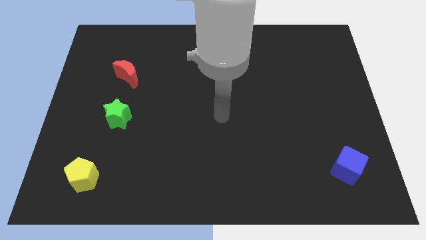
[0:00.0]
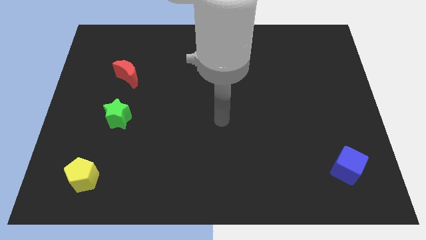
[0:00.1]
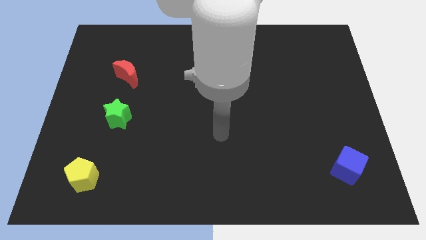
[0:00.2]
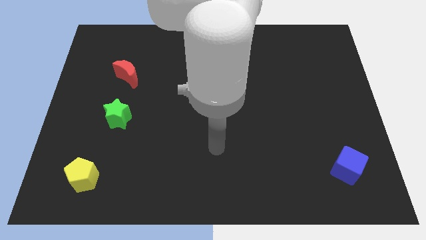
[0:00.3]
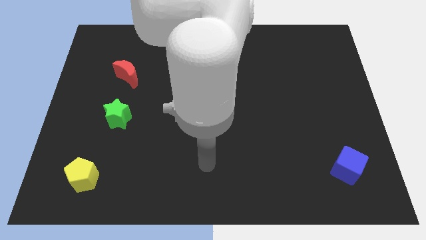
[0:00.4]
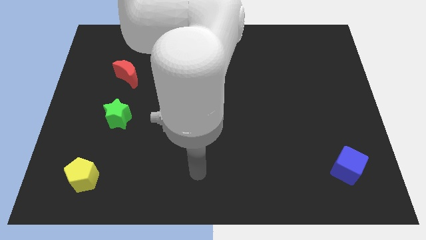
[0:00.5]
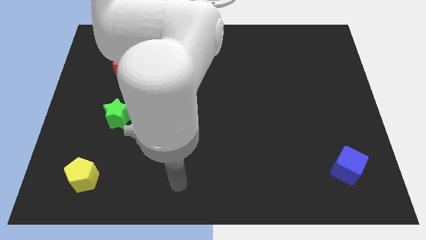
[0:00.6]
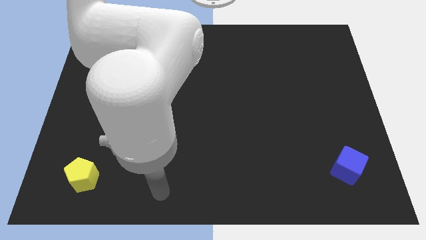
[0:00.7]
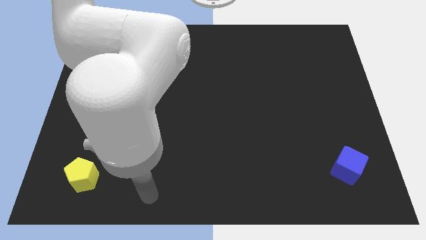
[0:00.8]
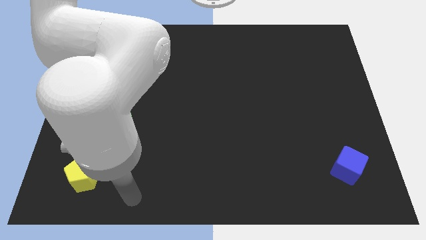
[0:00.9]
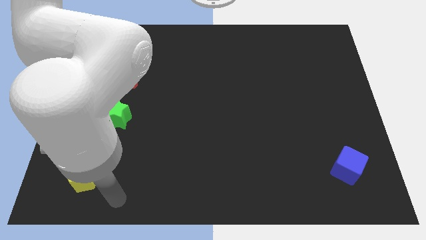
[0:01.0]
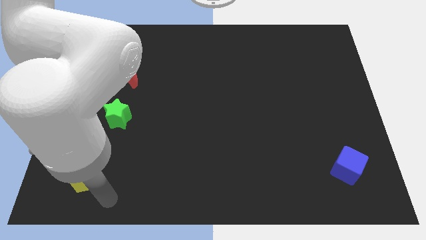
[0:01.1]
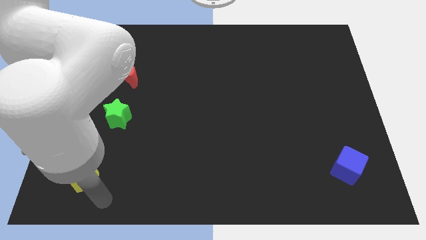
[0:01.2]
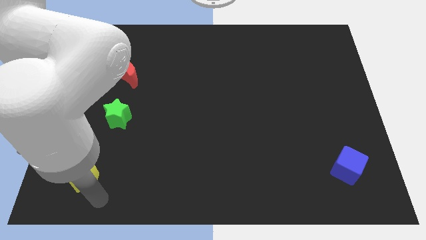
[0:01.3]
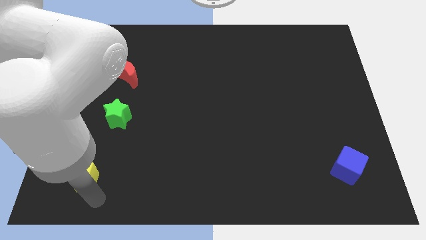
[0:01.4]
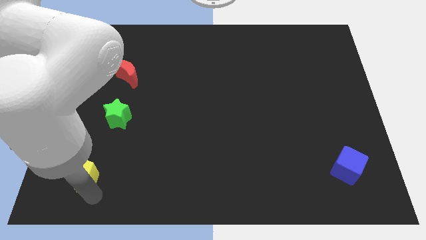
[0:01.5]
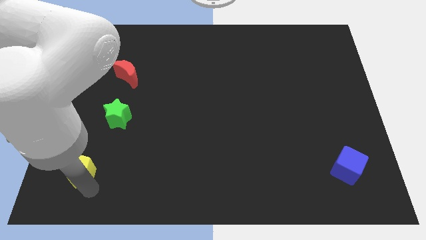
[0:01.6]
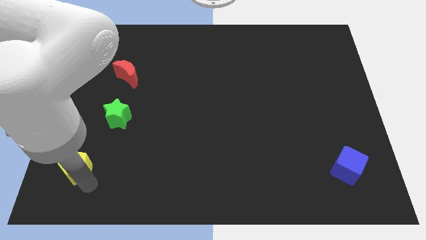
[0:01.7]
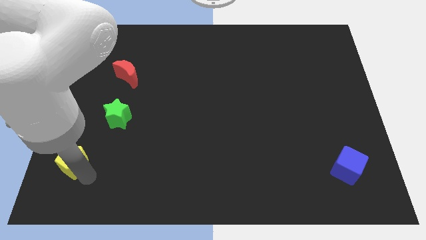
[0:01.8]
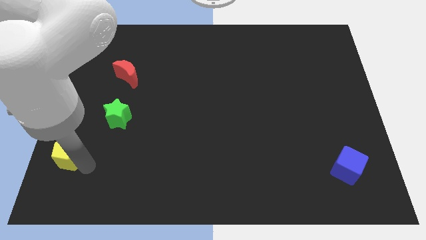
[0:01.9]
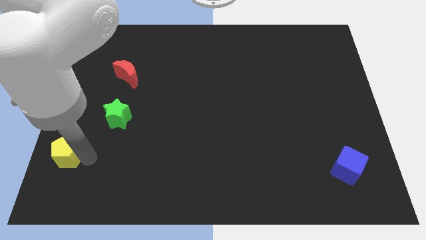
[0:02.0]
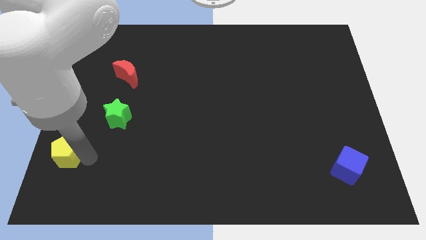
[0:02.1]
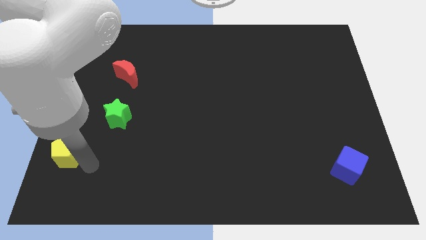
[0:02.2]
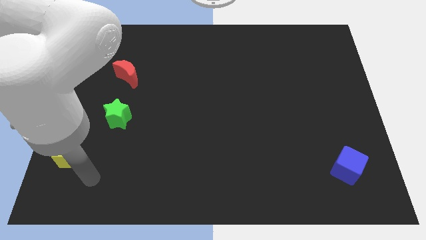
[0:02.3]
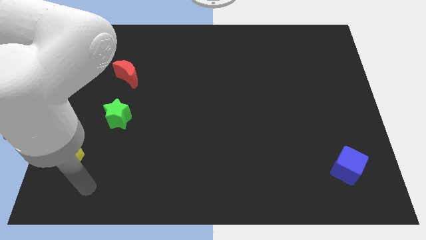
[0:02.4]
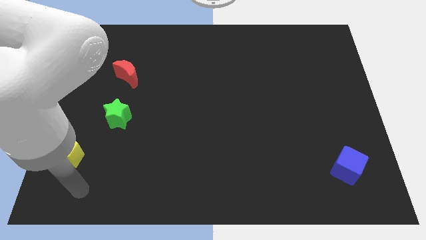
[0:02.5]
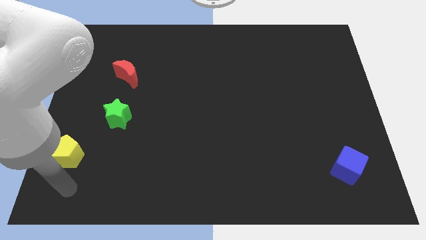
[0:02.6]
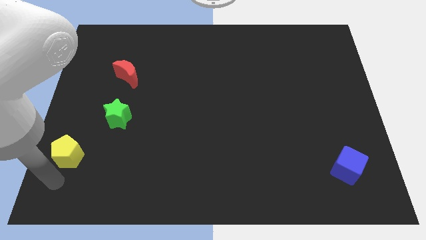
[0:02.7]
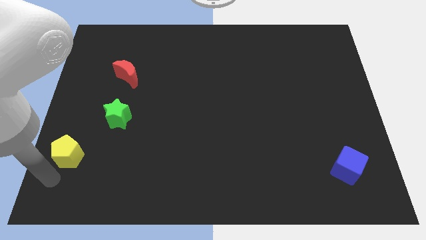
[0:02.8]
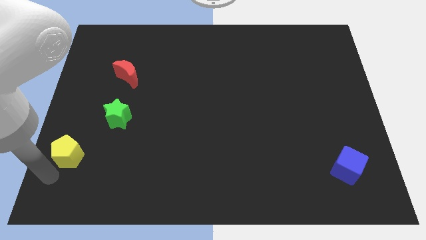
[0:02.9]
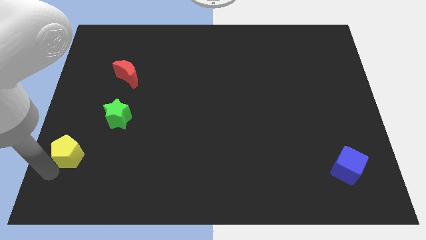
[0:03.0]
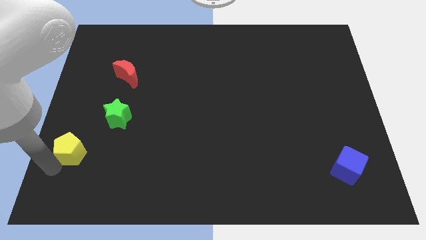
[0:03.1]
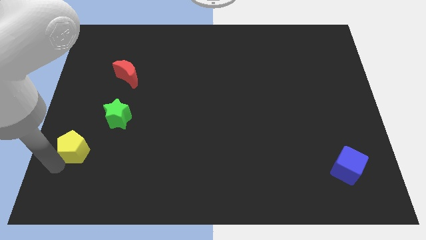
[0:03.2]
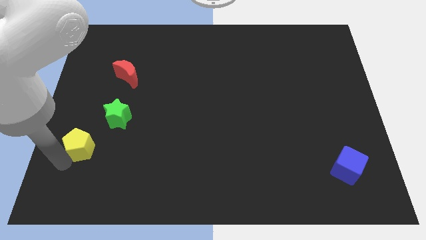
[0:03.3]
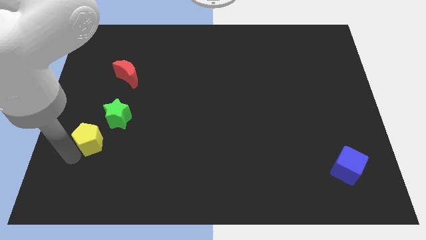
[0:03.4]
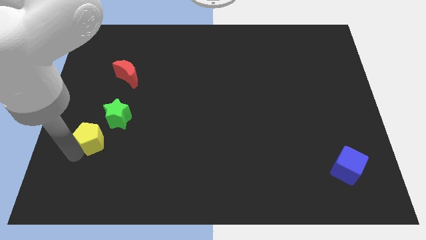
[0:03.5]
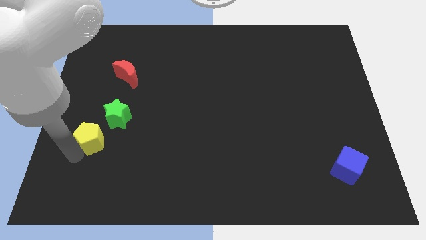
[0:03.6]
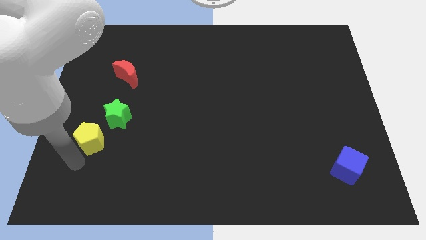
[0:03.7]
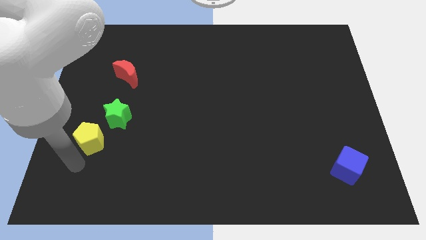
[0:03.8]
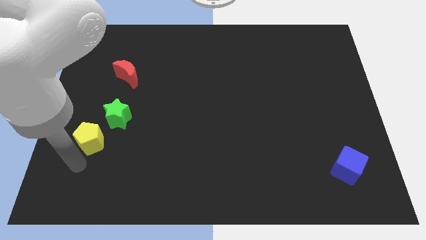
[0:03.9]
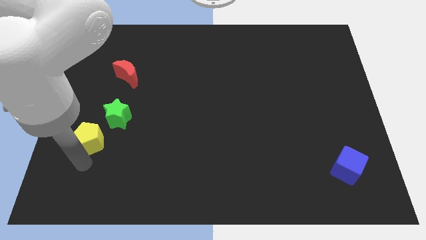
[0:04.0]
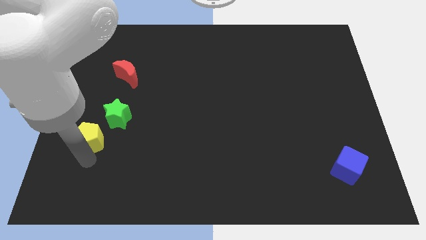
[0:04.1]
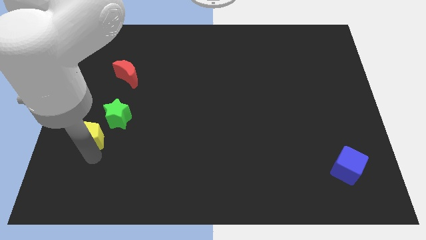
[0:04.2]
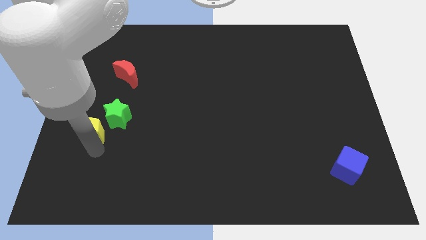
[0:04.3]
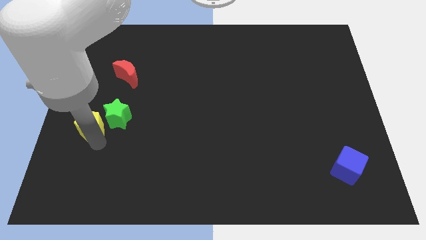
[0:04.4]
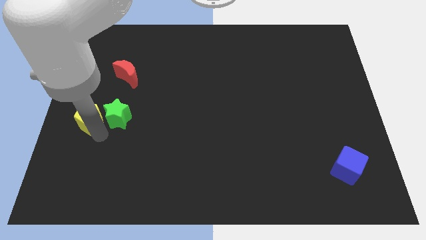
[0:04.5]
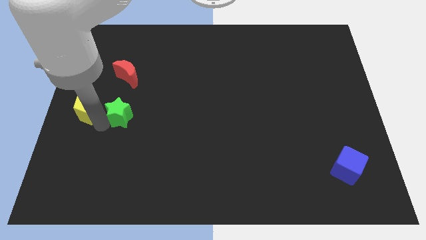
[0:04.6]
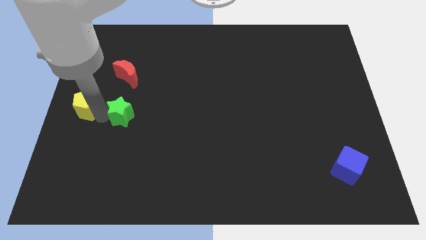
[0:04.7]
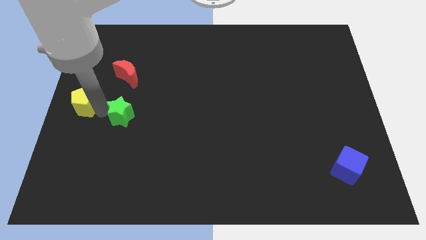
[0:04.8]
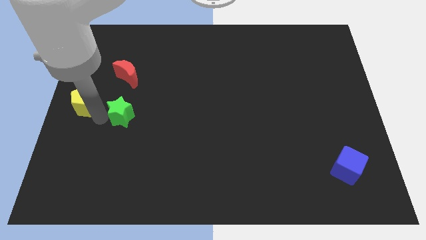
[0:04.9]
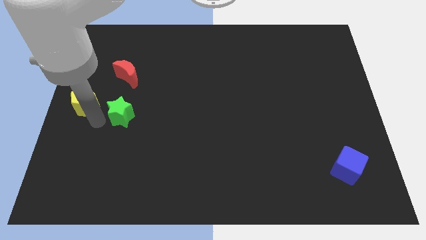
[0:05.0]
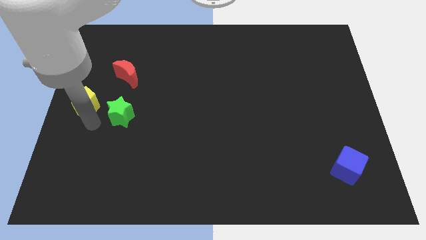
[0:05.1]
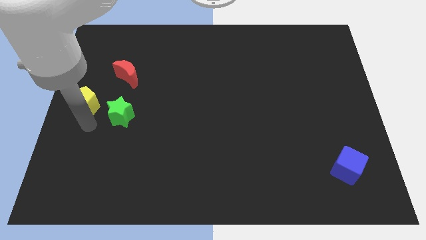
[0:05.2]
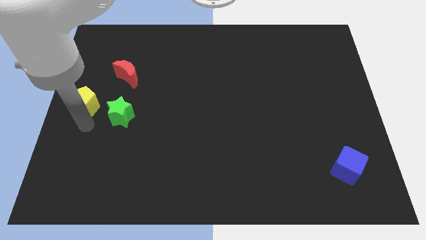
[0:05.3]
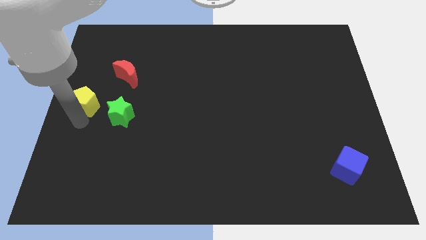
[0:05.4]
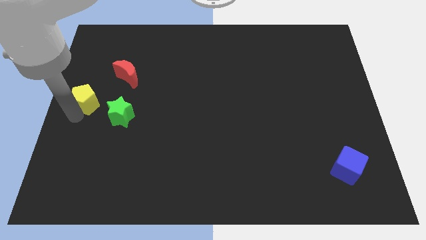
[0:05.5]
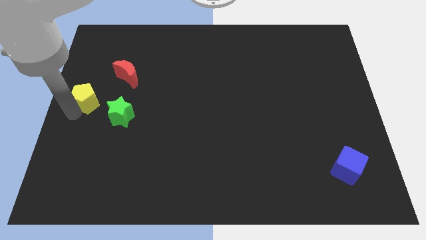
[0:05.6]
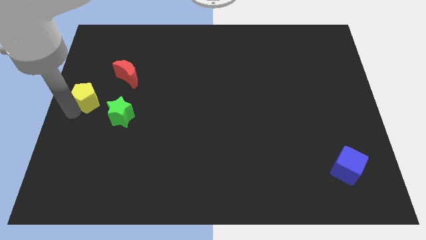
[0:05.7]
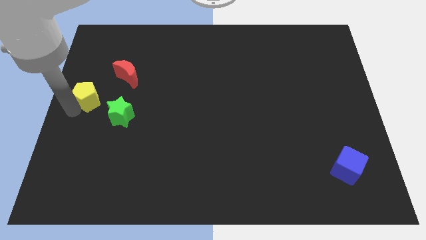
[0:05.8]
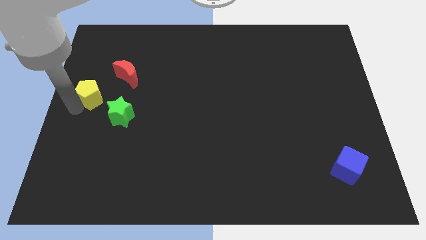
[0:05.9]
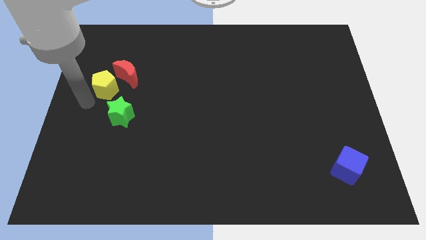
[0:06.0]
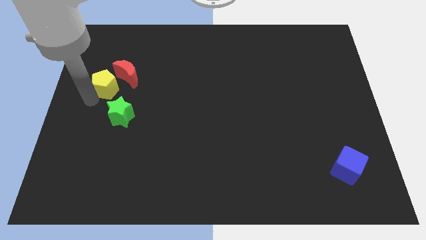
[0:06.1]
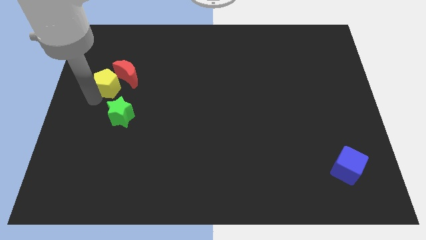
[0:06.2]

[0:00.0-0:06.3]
slide the yellow block next to the red block

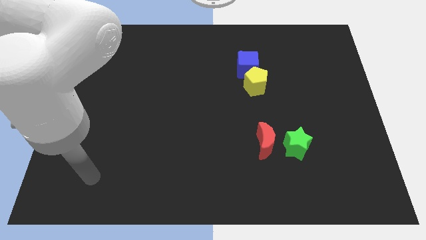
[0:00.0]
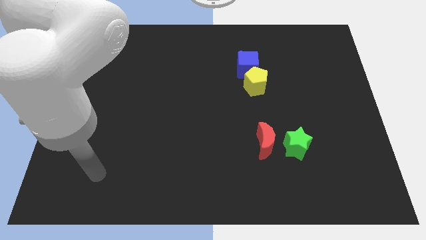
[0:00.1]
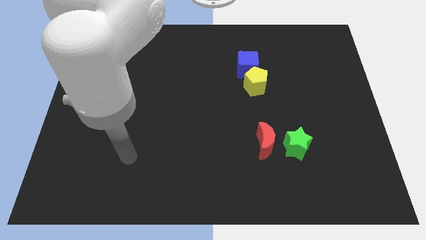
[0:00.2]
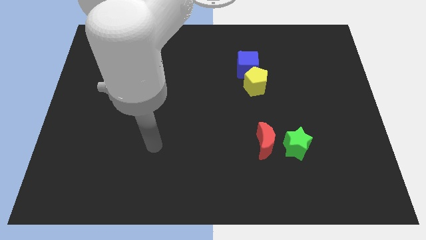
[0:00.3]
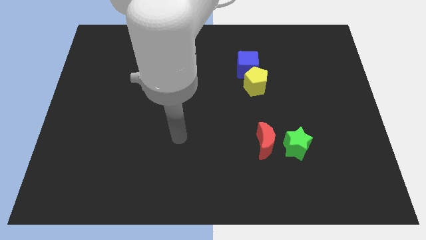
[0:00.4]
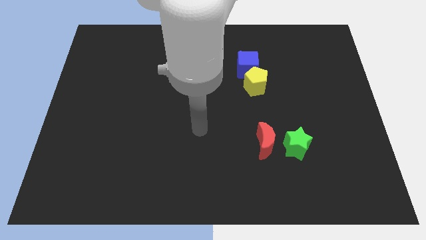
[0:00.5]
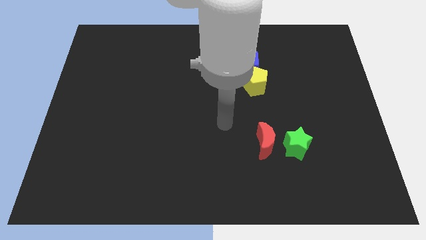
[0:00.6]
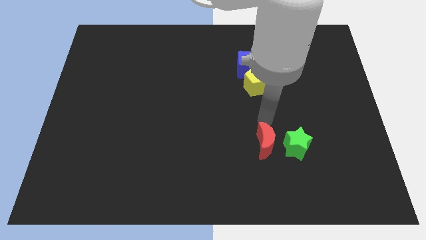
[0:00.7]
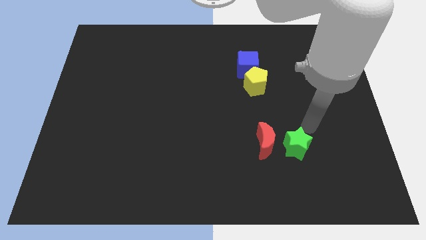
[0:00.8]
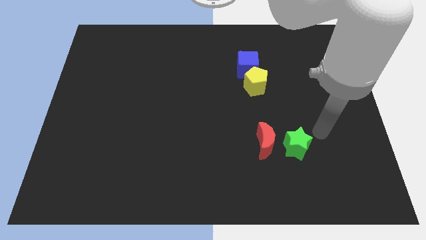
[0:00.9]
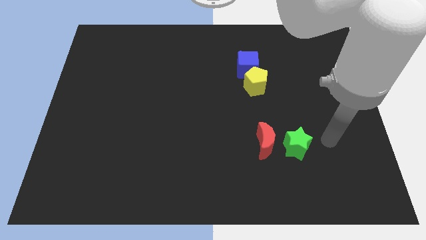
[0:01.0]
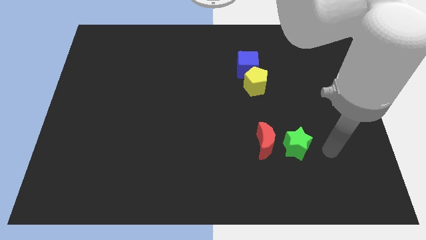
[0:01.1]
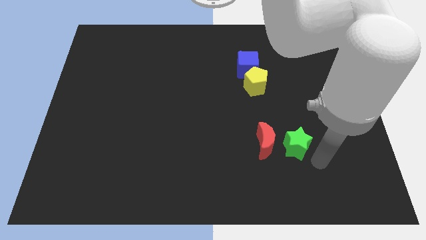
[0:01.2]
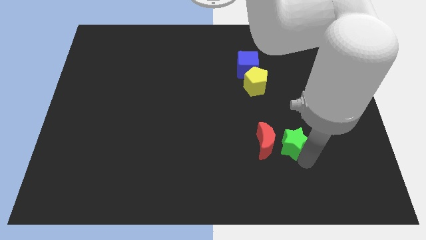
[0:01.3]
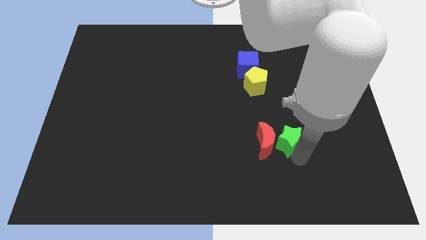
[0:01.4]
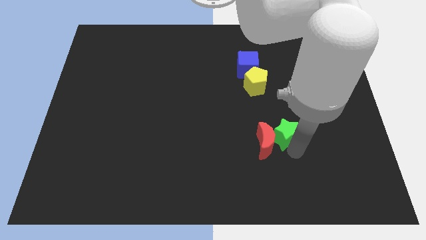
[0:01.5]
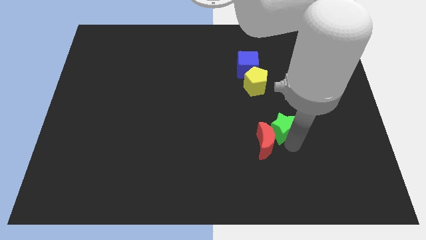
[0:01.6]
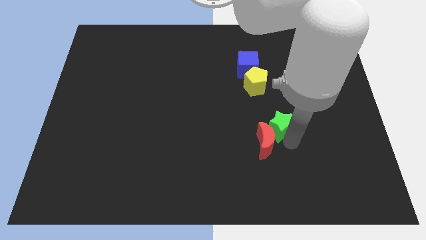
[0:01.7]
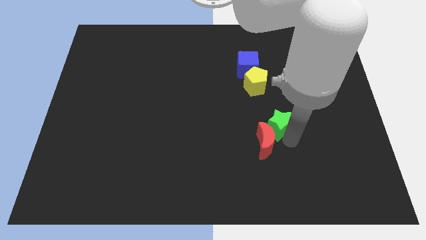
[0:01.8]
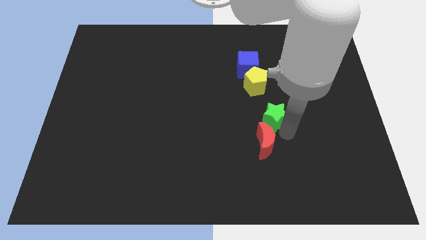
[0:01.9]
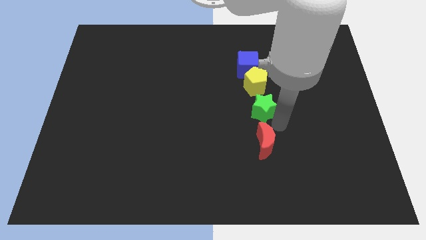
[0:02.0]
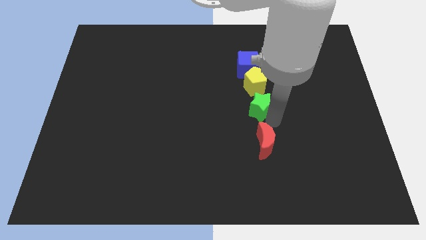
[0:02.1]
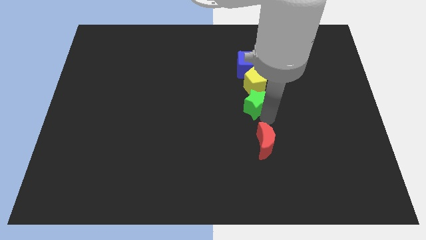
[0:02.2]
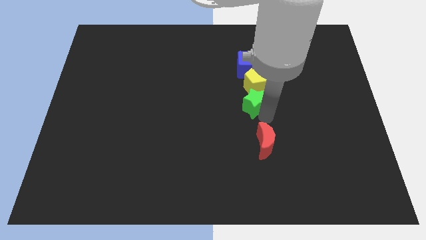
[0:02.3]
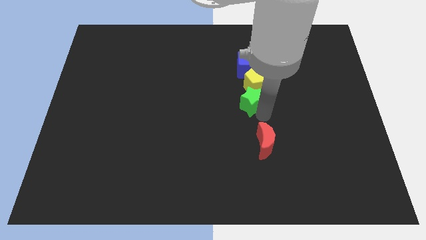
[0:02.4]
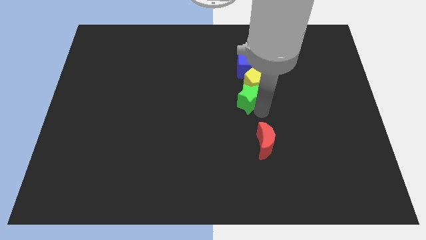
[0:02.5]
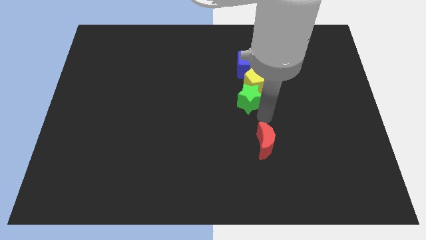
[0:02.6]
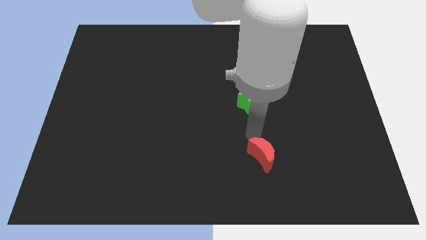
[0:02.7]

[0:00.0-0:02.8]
move the green star close to the pentagon
